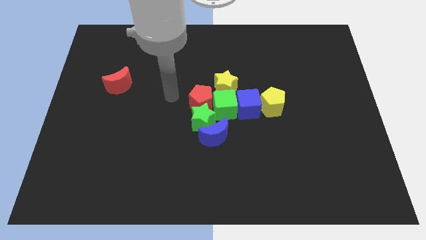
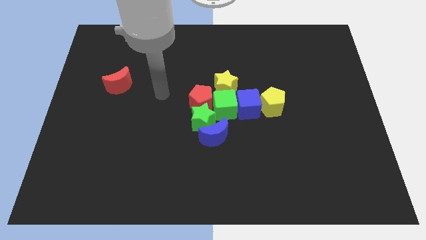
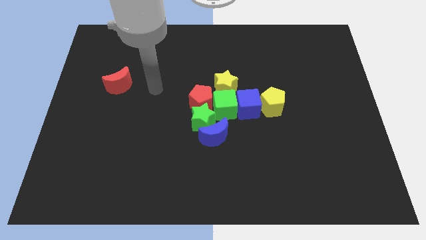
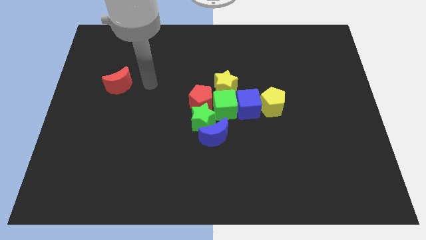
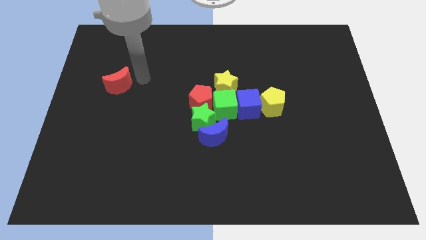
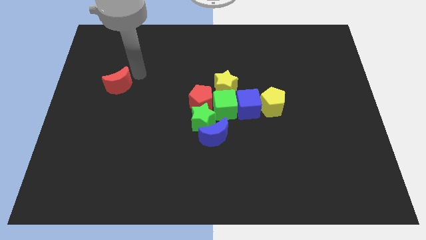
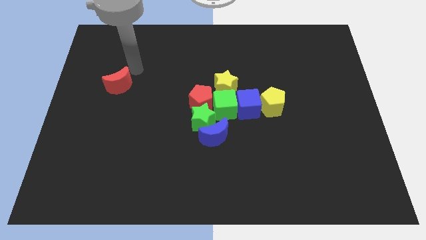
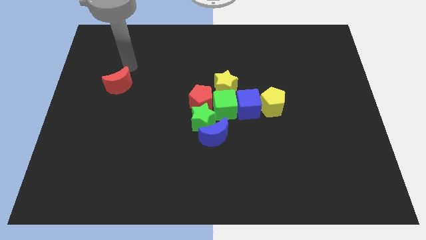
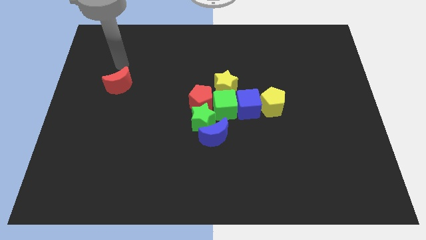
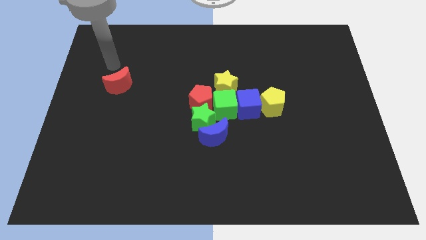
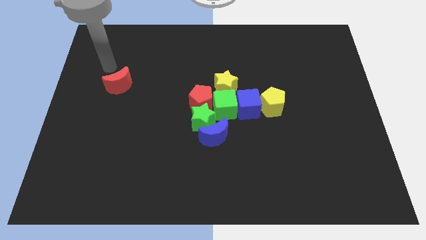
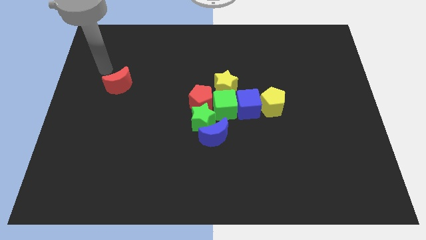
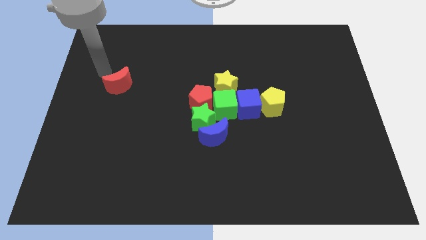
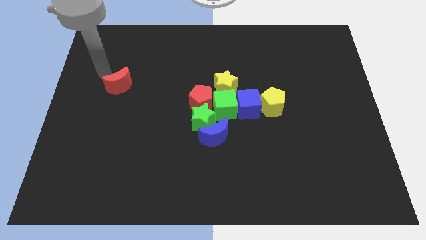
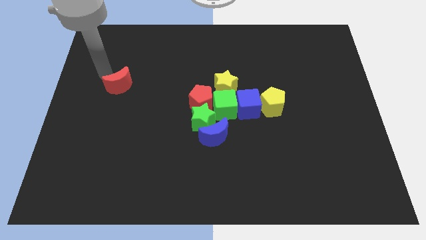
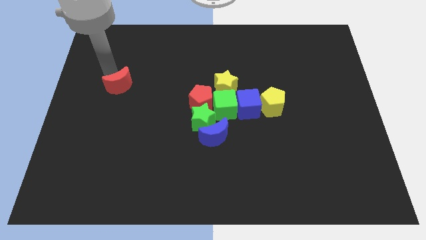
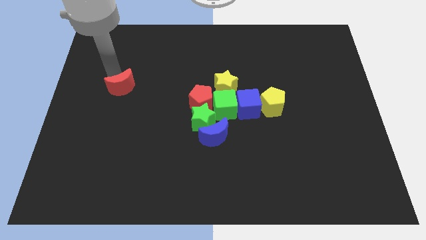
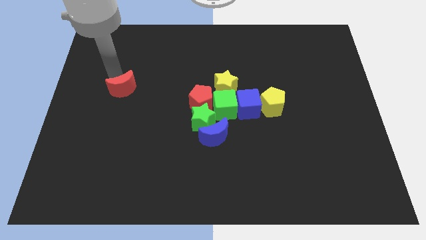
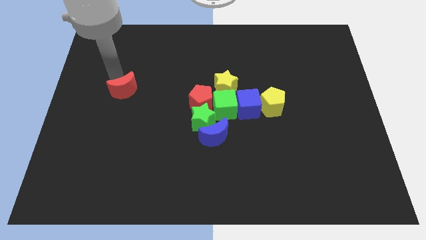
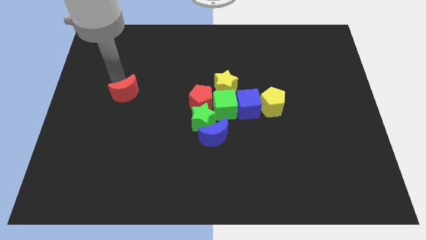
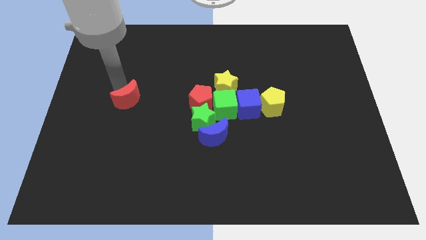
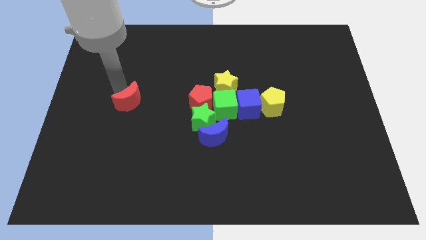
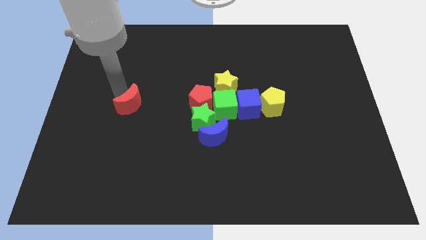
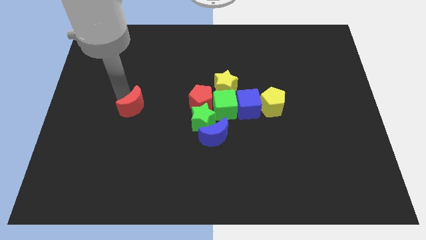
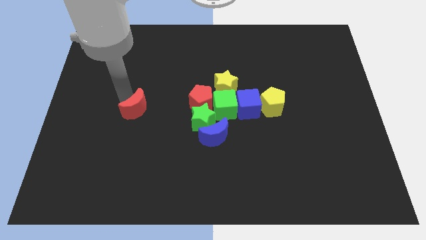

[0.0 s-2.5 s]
push the red crescent to the left of the red pentagon

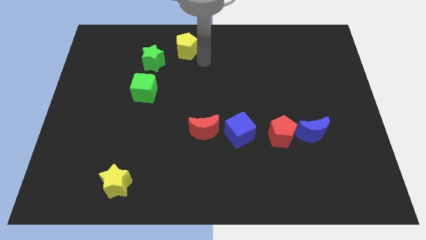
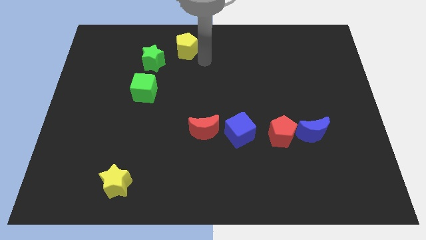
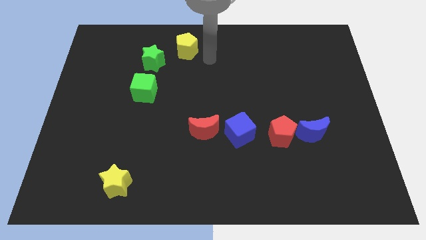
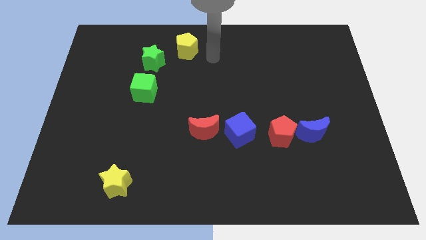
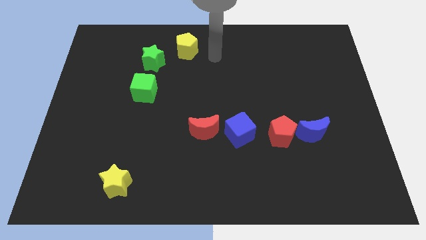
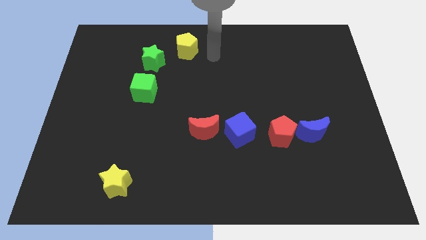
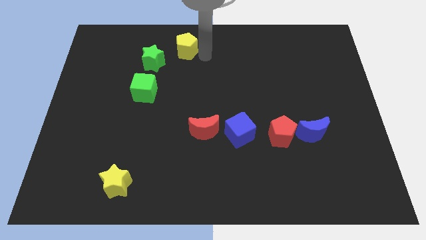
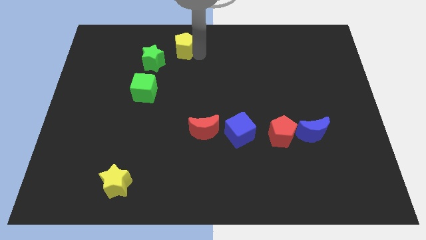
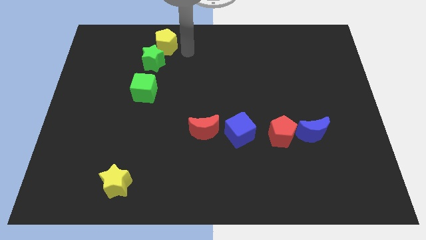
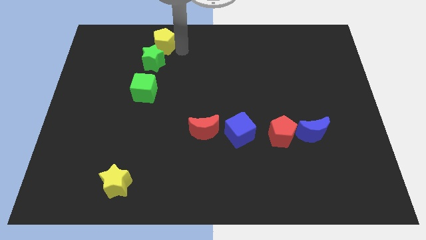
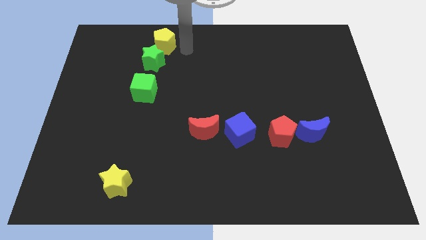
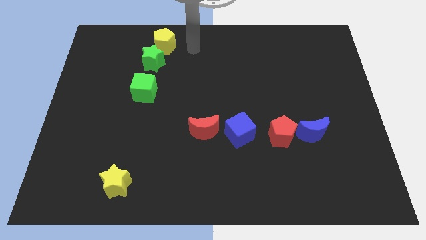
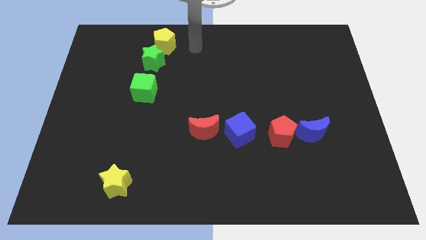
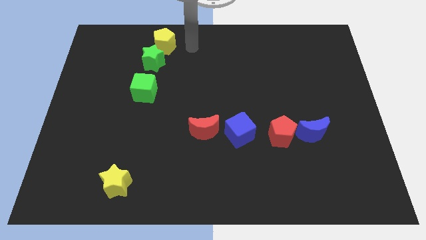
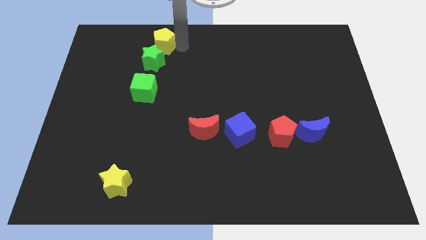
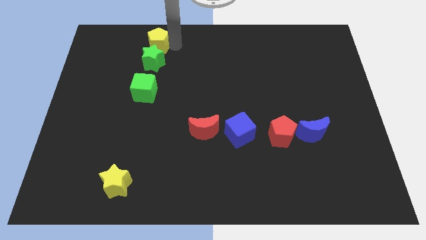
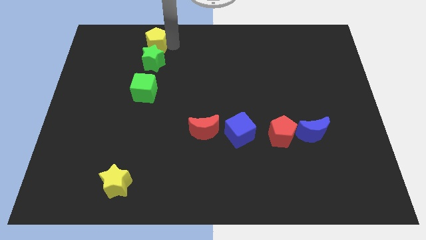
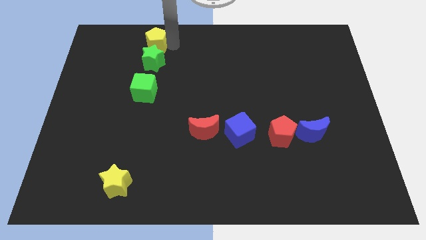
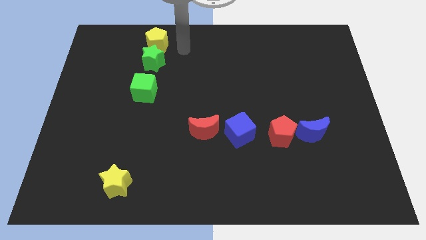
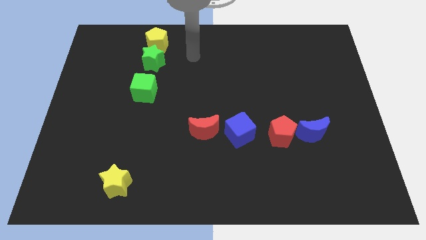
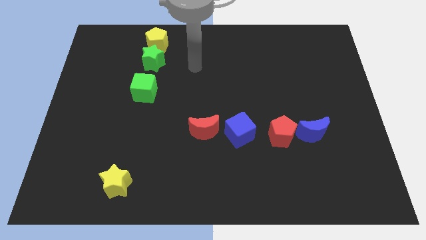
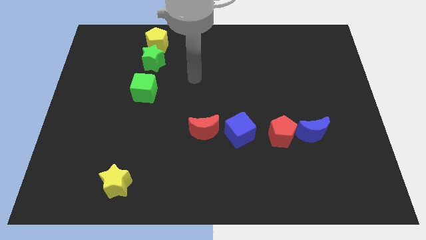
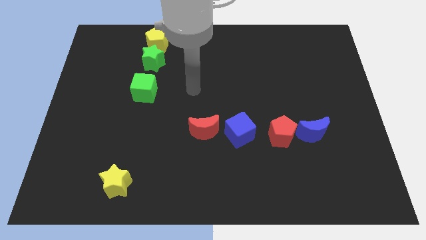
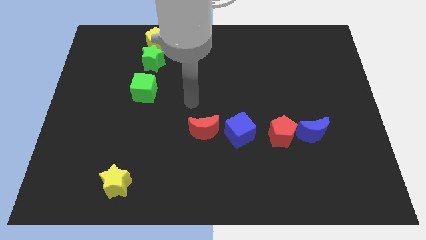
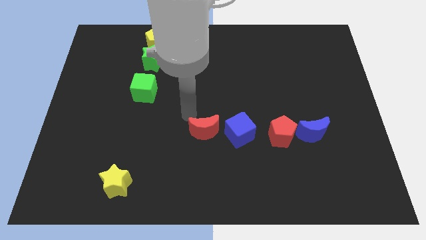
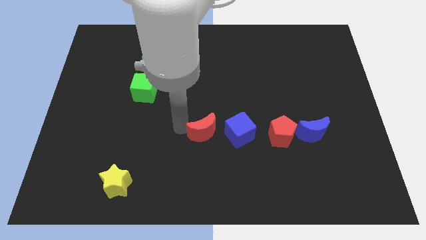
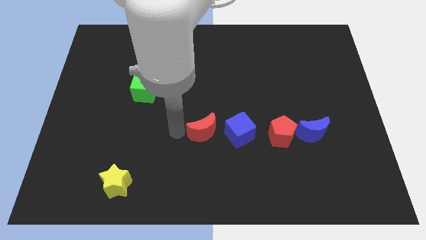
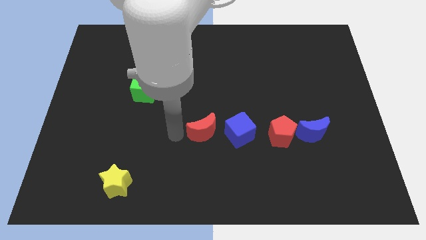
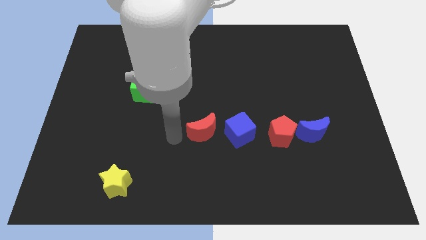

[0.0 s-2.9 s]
place yellow pentagon to the top of green star

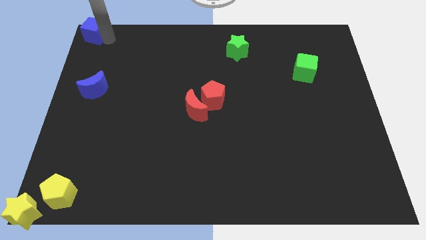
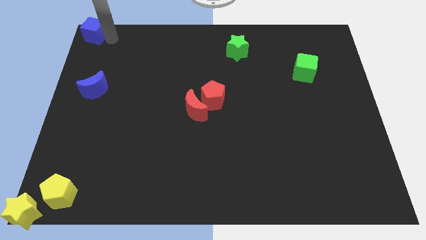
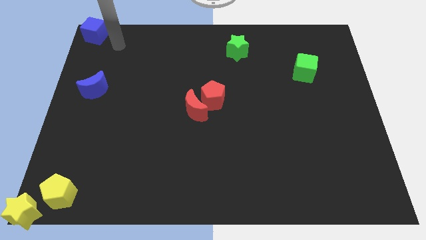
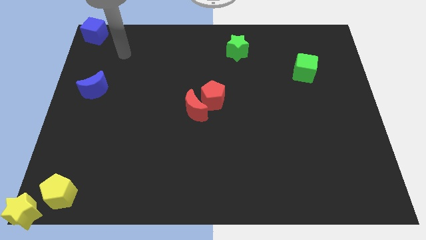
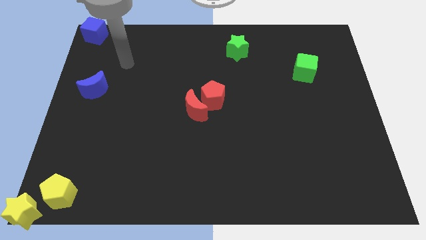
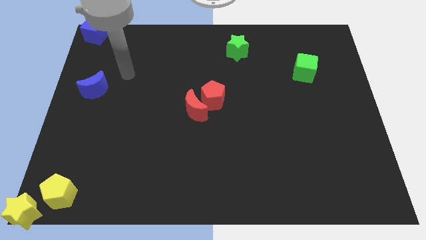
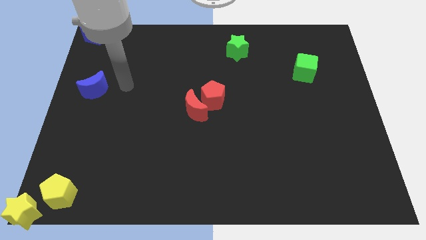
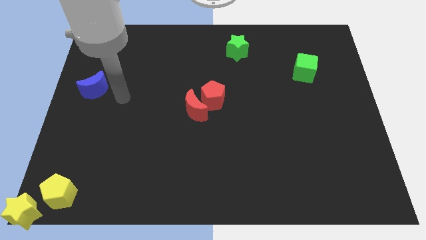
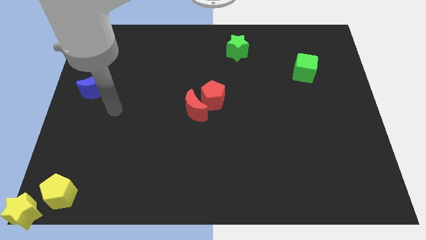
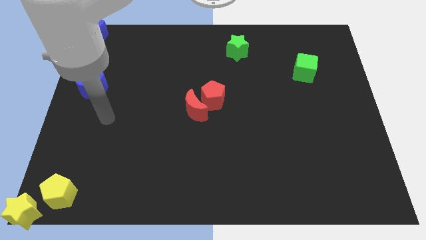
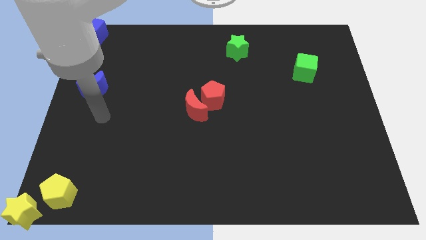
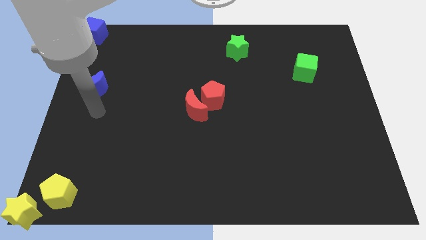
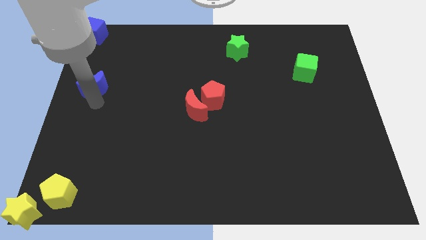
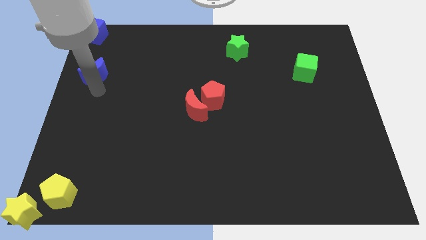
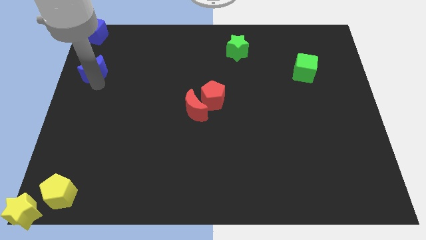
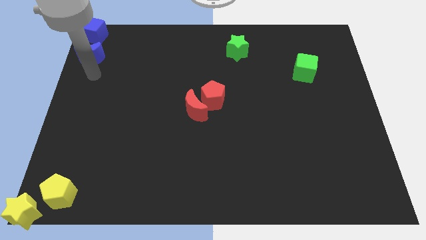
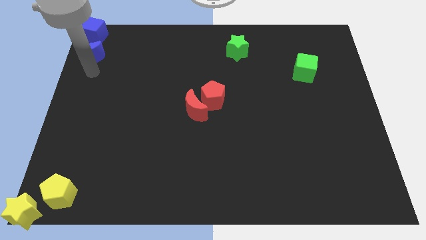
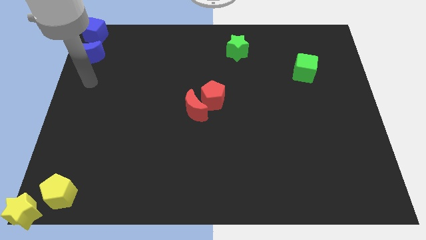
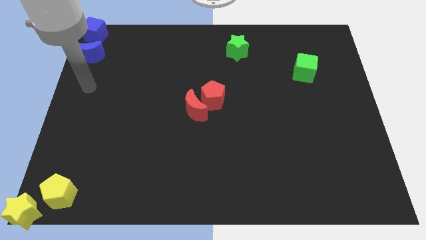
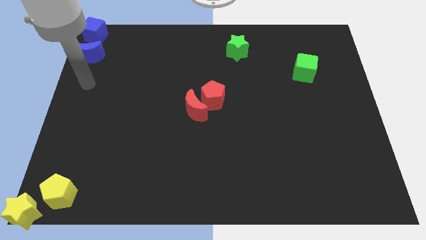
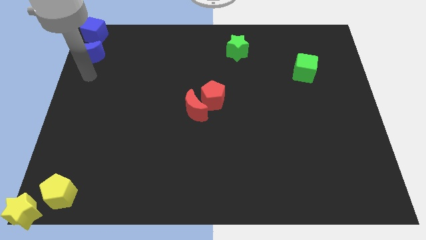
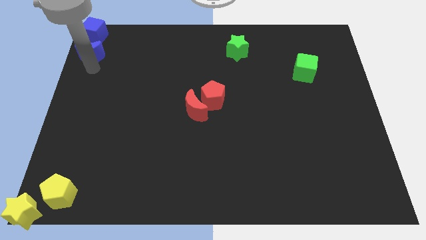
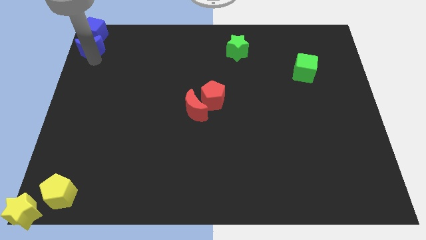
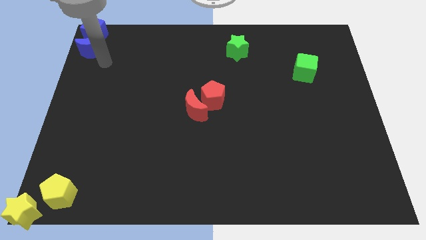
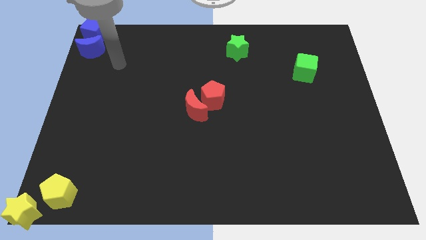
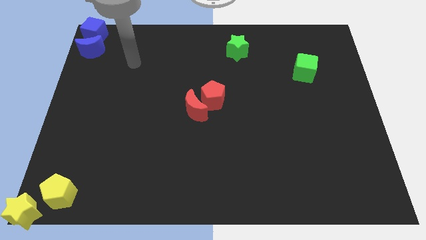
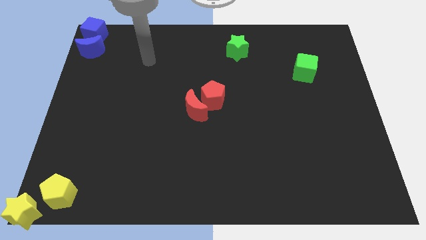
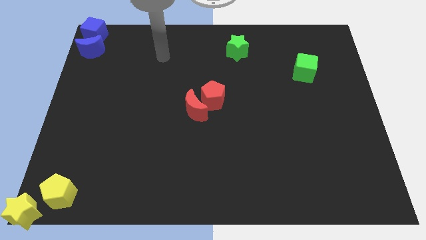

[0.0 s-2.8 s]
move blue crescent into blue cube

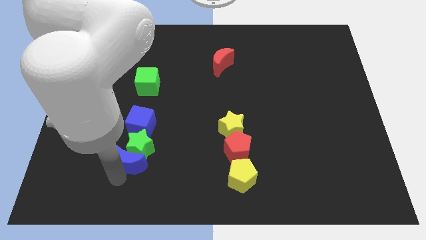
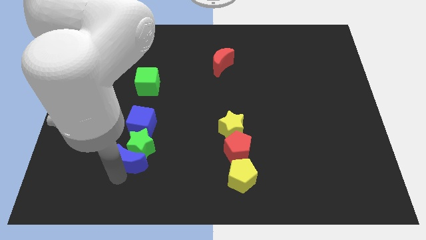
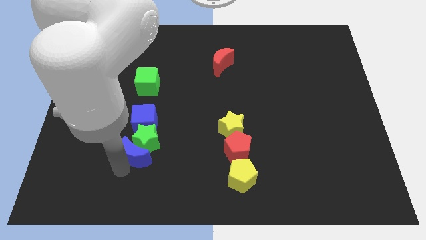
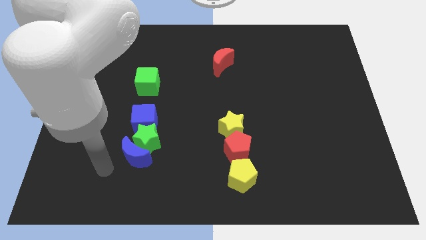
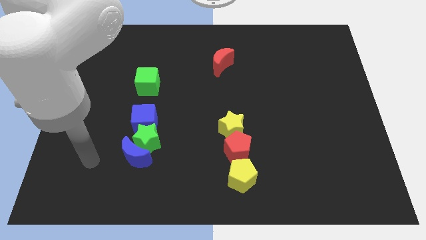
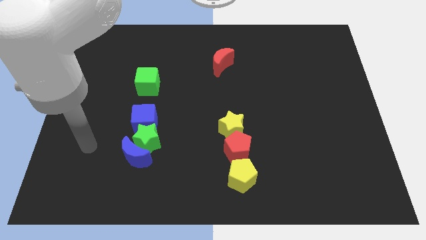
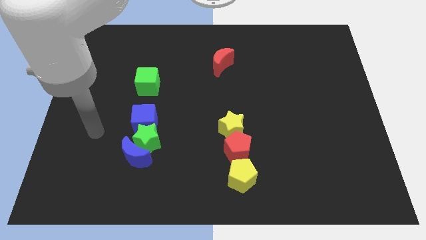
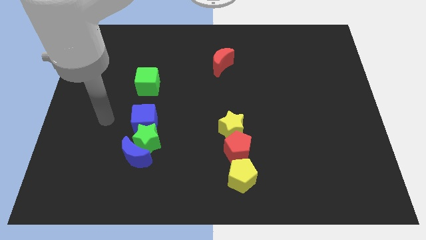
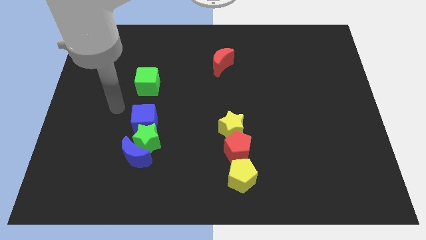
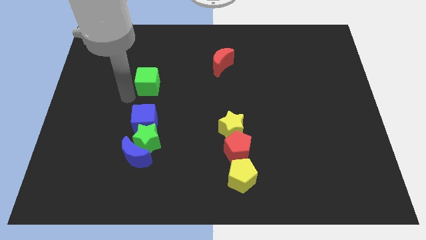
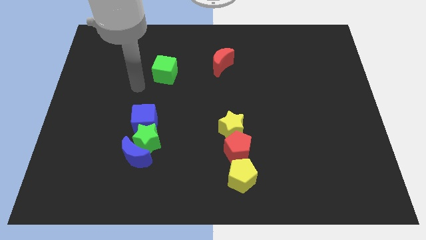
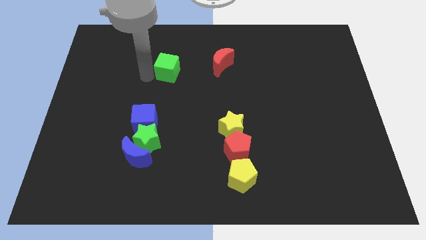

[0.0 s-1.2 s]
push the green cube slightly to the top of the board
